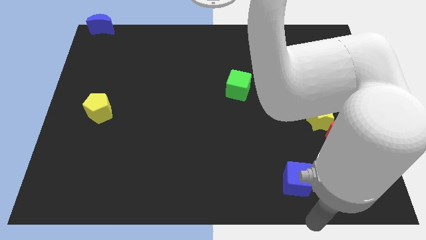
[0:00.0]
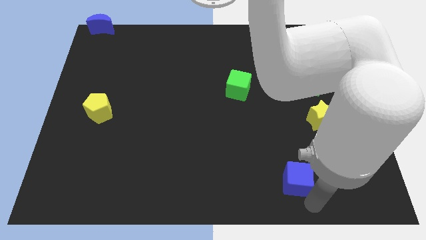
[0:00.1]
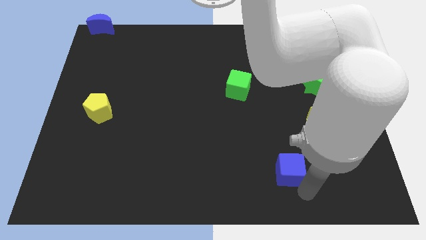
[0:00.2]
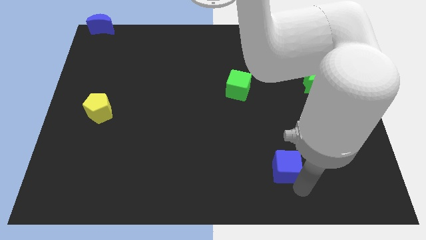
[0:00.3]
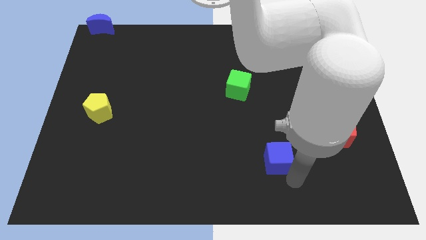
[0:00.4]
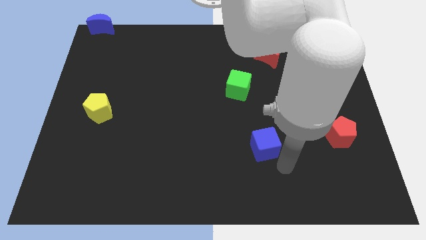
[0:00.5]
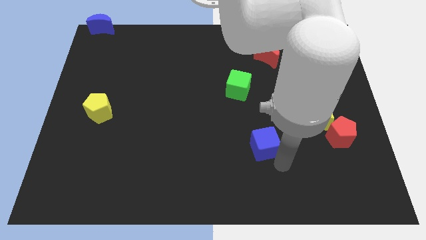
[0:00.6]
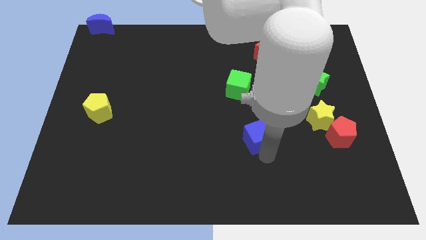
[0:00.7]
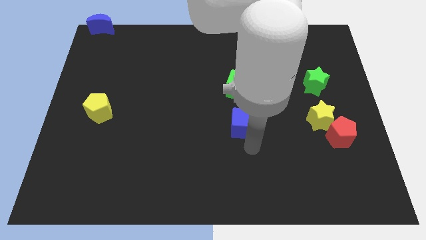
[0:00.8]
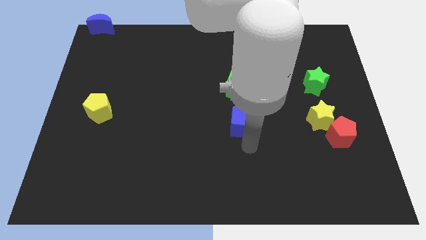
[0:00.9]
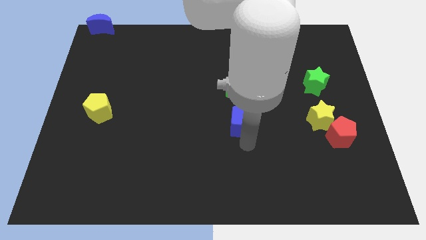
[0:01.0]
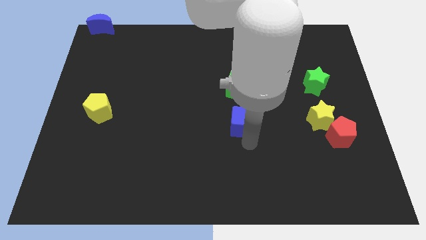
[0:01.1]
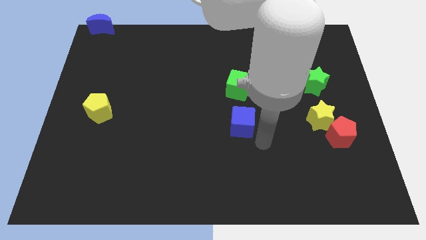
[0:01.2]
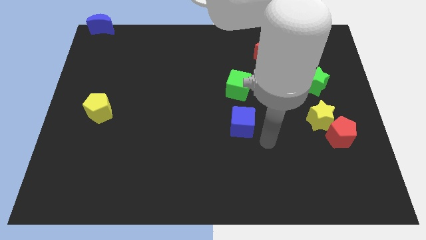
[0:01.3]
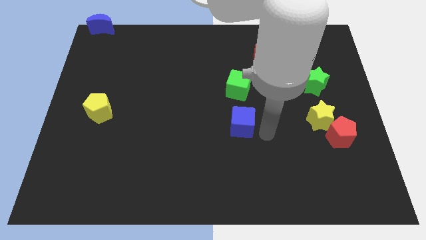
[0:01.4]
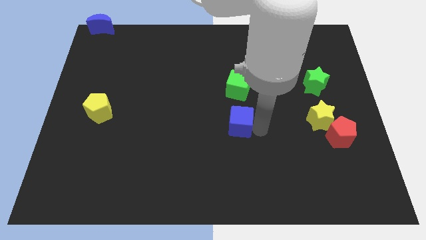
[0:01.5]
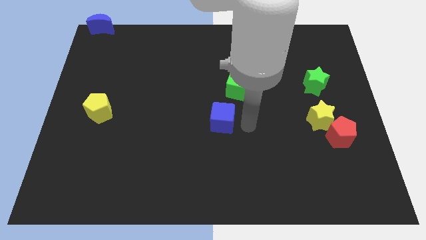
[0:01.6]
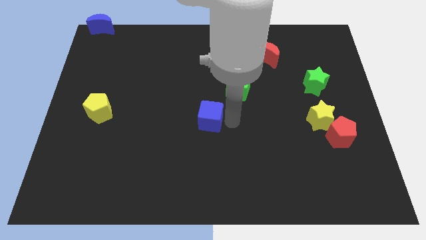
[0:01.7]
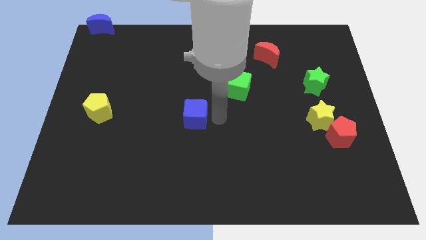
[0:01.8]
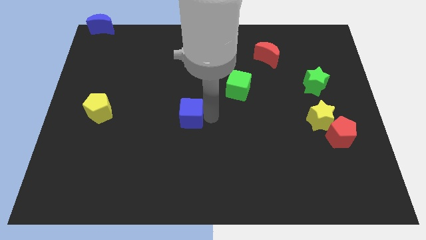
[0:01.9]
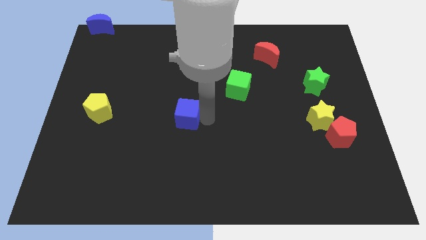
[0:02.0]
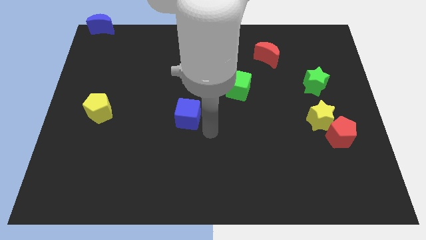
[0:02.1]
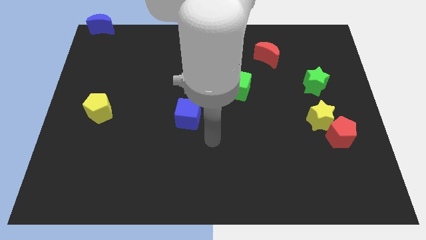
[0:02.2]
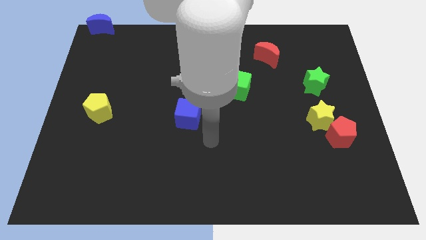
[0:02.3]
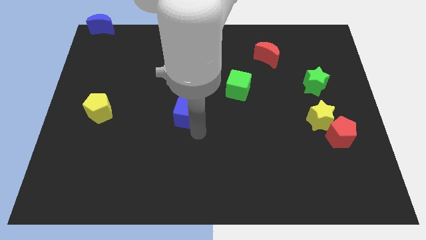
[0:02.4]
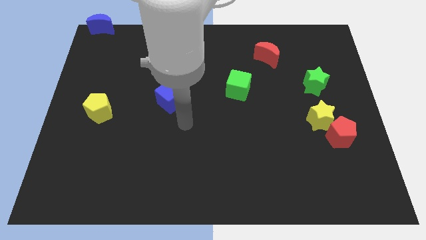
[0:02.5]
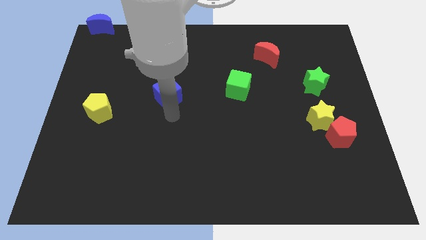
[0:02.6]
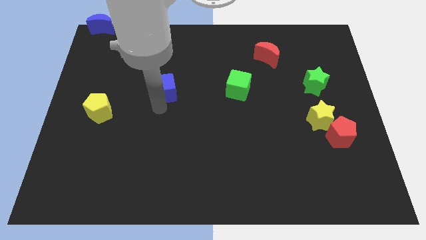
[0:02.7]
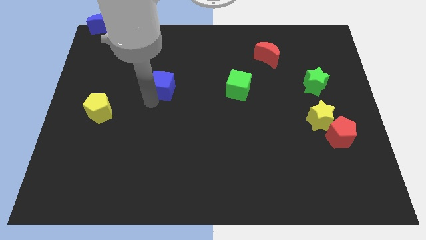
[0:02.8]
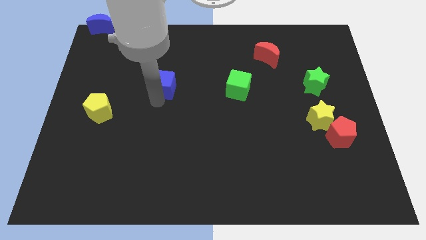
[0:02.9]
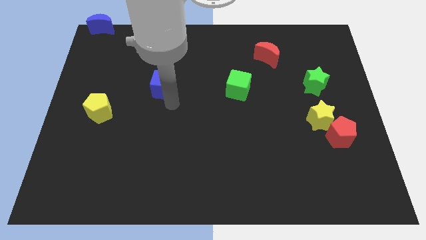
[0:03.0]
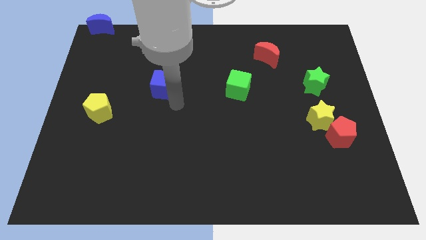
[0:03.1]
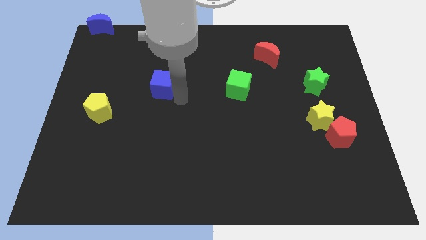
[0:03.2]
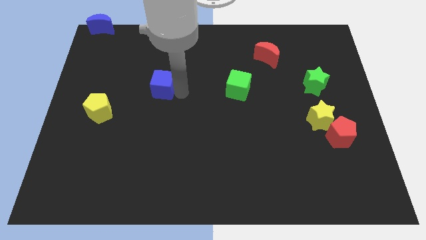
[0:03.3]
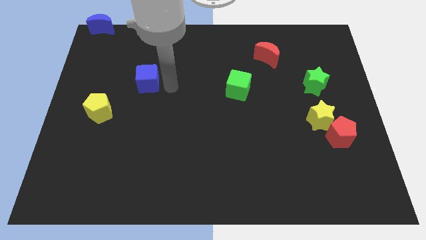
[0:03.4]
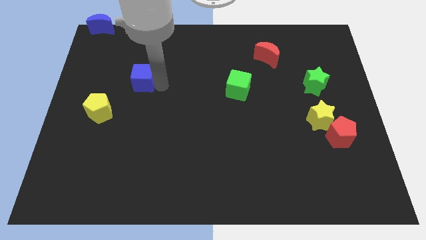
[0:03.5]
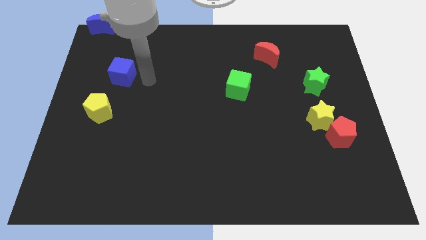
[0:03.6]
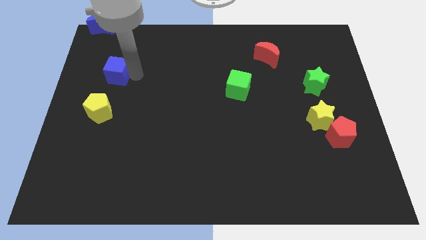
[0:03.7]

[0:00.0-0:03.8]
place the blue cube at the top of yellow pentagon

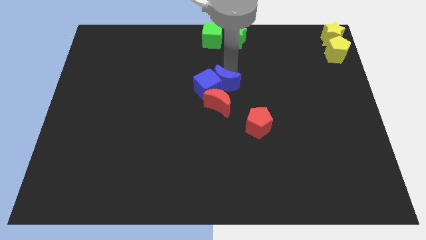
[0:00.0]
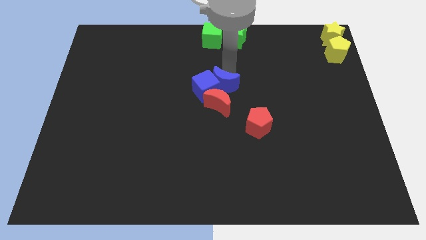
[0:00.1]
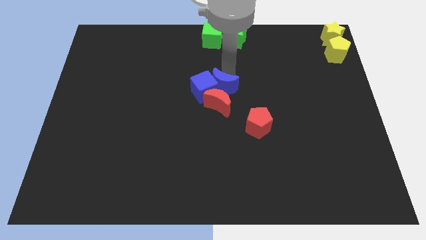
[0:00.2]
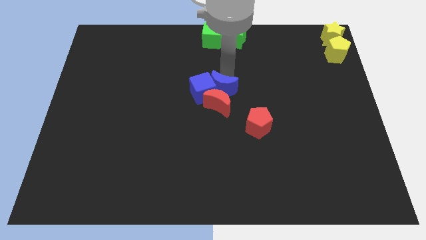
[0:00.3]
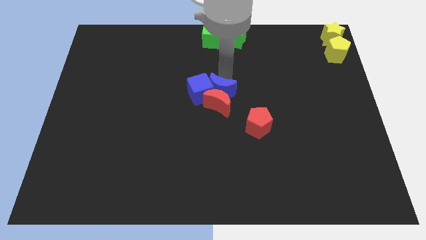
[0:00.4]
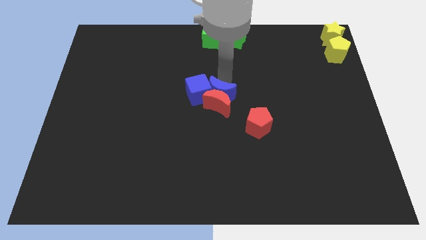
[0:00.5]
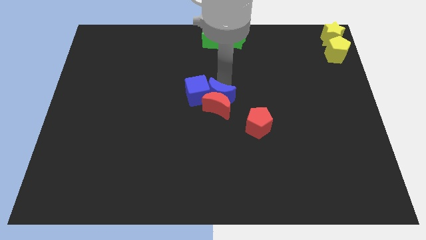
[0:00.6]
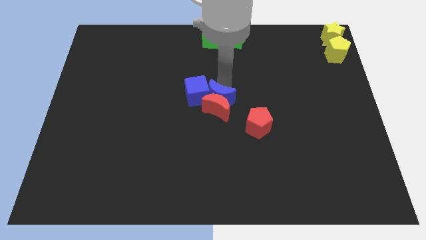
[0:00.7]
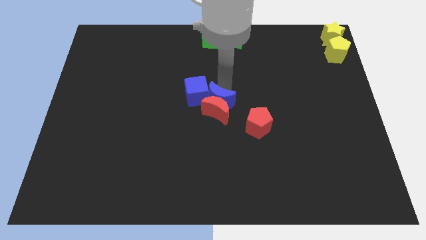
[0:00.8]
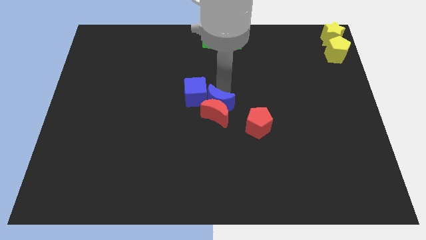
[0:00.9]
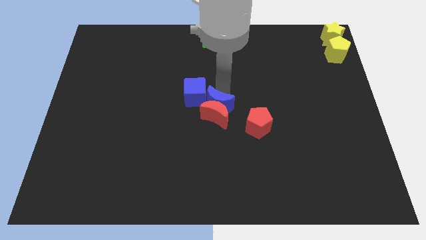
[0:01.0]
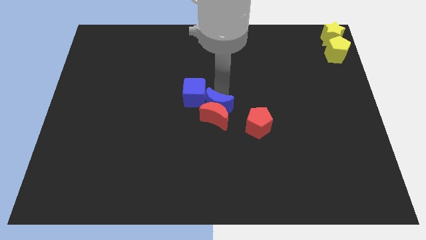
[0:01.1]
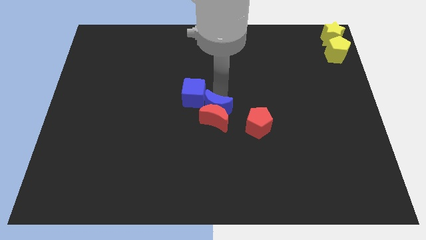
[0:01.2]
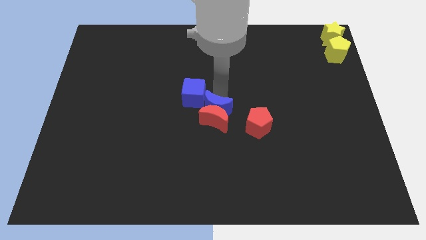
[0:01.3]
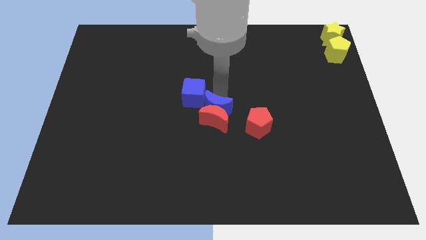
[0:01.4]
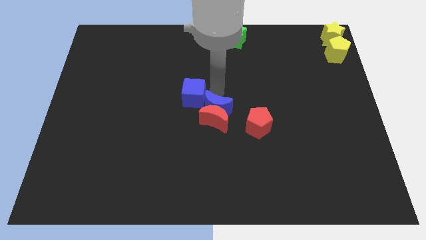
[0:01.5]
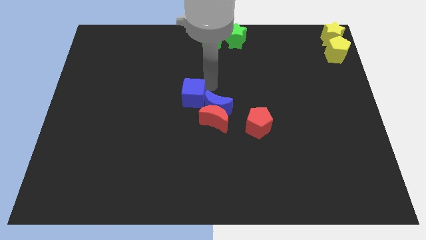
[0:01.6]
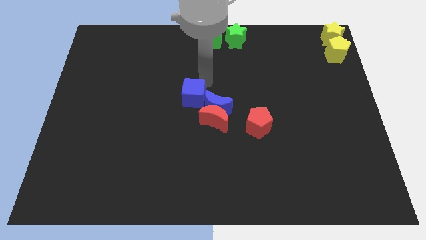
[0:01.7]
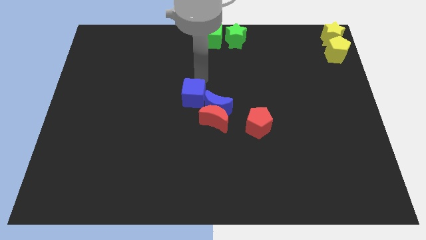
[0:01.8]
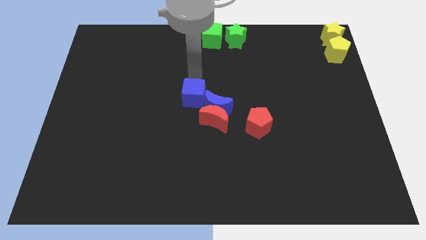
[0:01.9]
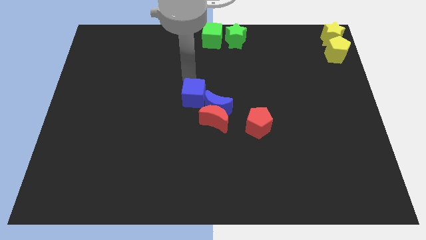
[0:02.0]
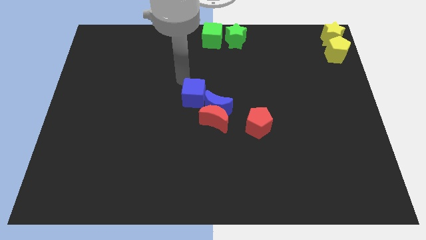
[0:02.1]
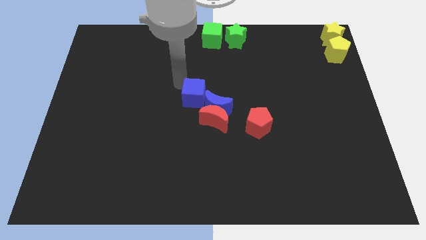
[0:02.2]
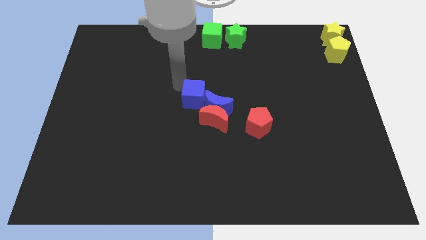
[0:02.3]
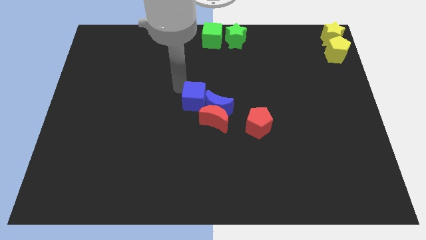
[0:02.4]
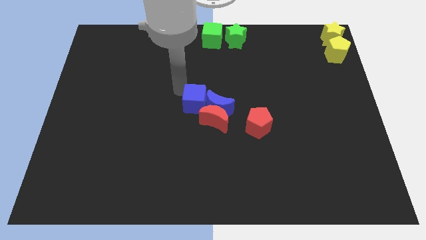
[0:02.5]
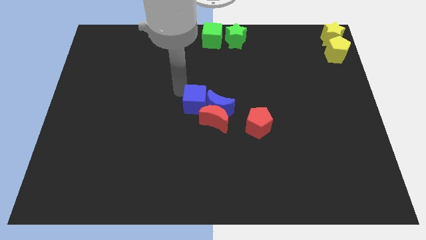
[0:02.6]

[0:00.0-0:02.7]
slide blue moon into red moon

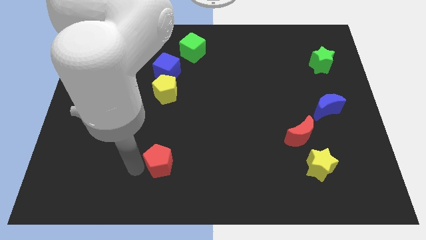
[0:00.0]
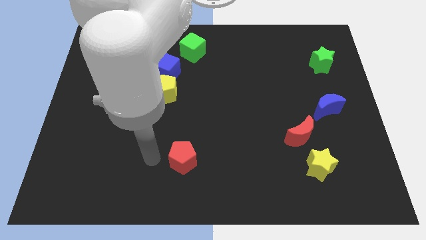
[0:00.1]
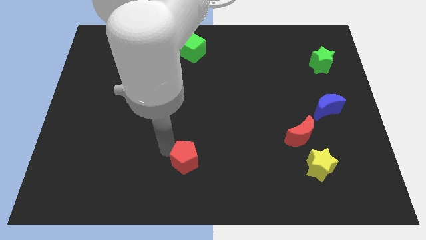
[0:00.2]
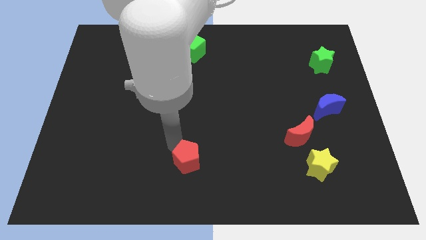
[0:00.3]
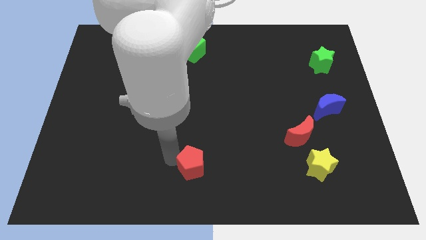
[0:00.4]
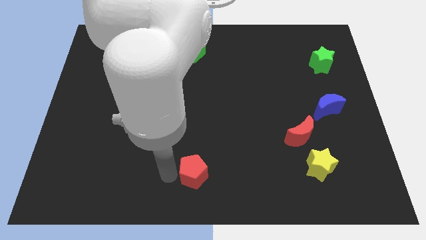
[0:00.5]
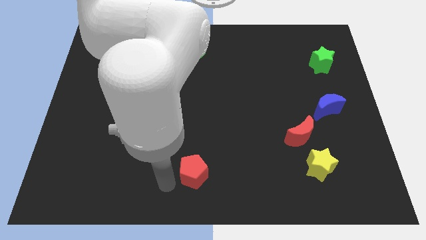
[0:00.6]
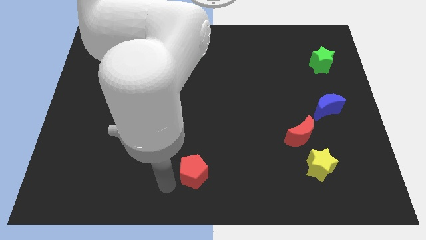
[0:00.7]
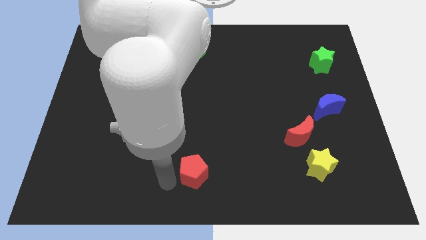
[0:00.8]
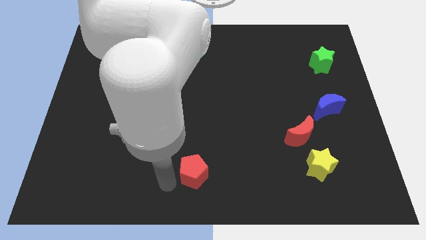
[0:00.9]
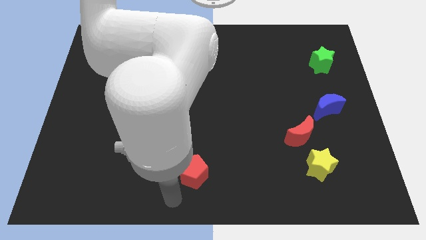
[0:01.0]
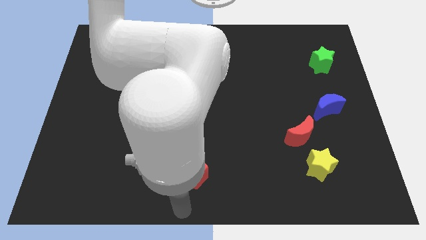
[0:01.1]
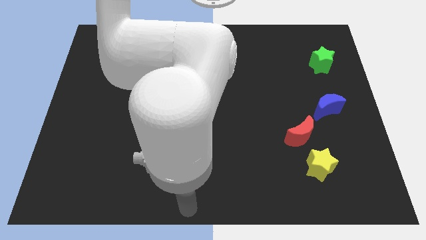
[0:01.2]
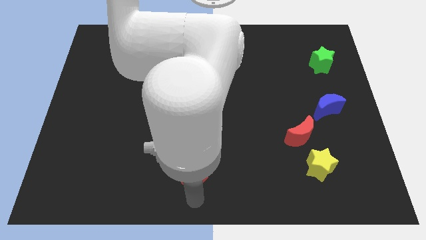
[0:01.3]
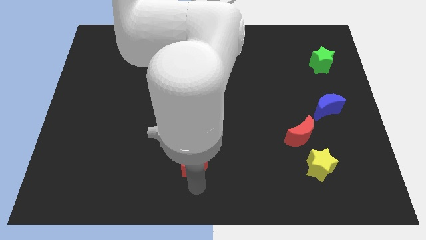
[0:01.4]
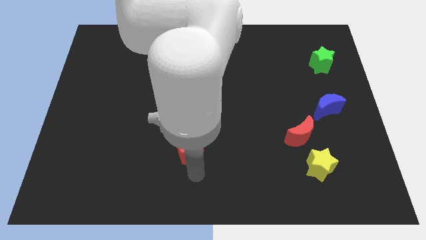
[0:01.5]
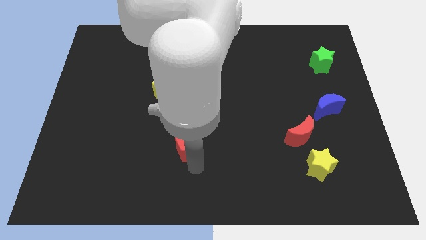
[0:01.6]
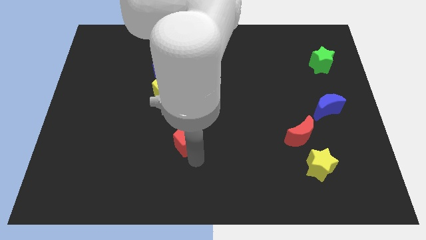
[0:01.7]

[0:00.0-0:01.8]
drag the red pentagon diagonally bottom right to the yellow pentagon

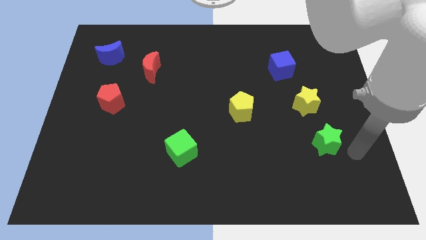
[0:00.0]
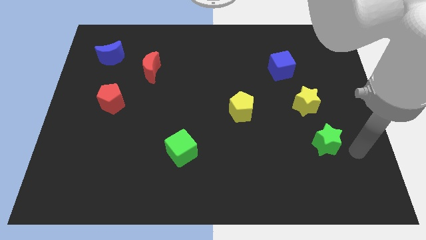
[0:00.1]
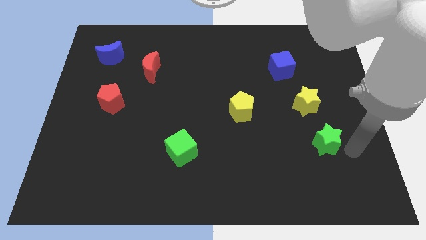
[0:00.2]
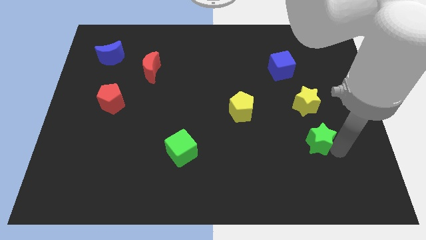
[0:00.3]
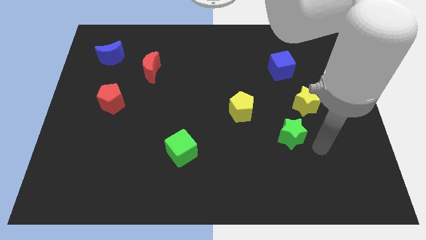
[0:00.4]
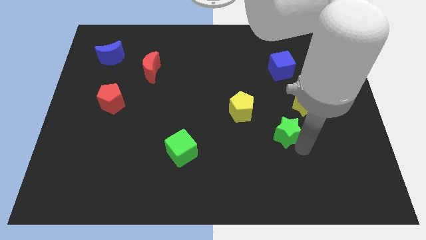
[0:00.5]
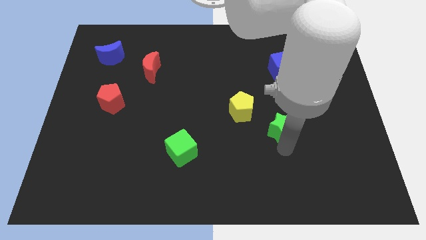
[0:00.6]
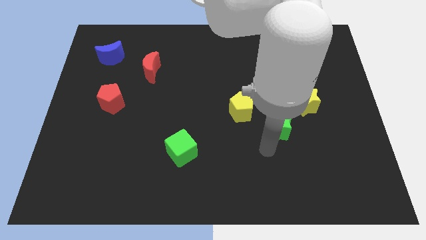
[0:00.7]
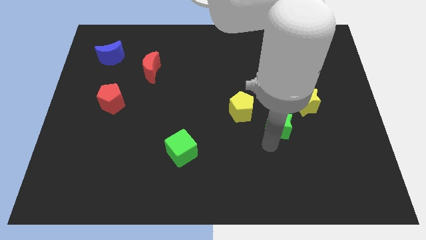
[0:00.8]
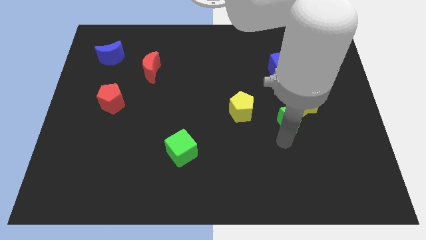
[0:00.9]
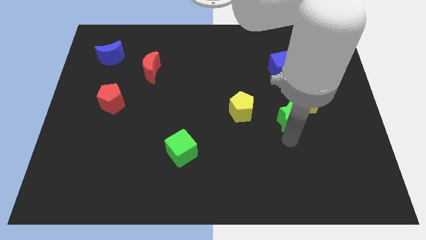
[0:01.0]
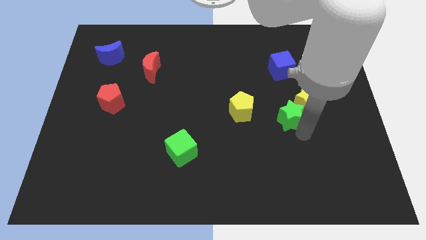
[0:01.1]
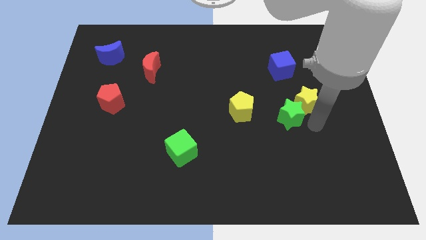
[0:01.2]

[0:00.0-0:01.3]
put the green star at the bottom left side of the yellow star
